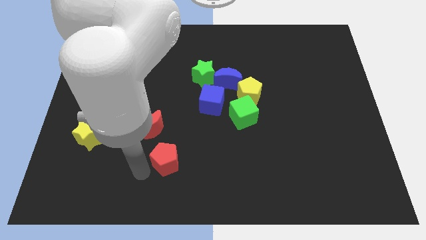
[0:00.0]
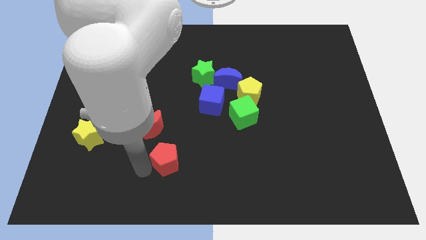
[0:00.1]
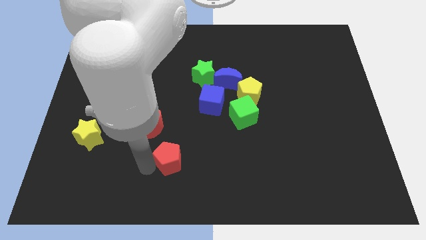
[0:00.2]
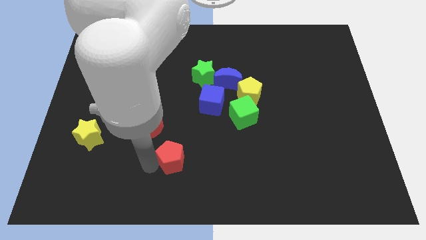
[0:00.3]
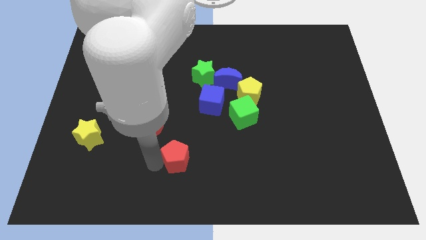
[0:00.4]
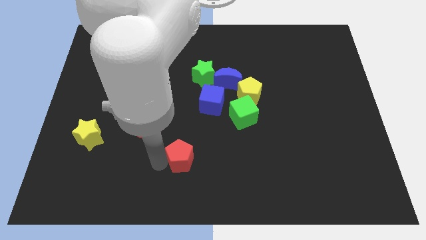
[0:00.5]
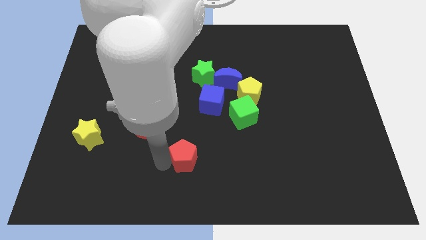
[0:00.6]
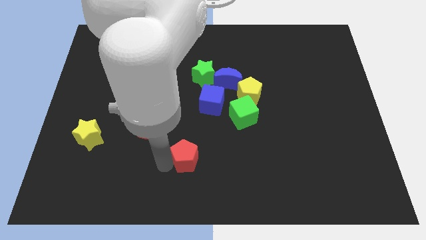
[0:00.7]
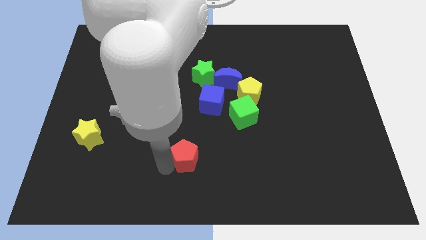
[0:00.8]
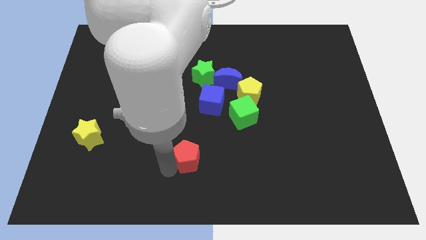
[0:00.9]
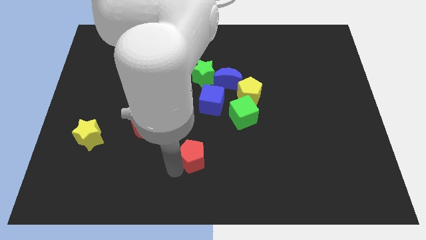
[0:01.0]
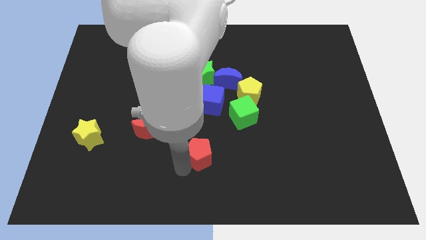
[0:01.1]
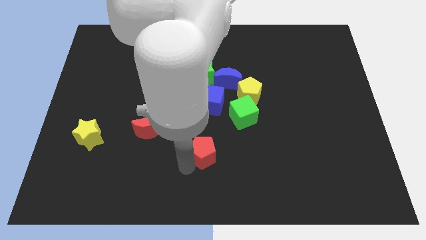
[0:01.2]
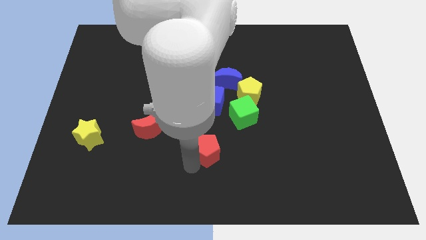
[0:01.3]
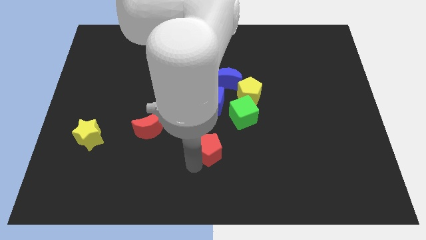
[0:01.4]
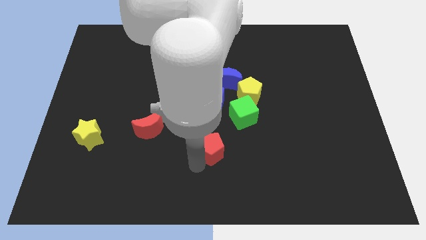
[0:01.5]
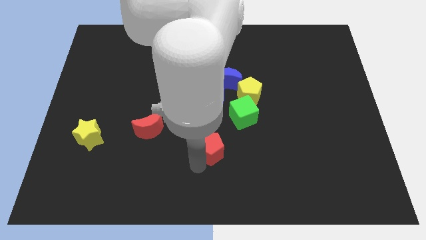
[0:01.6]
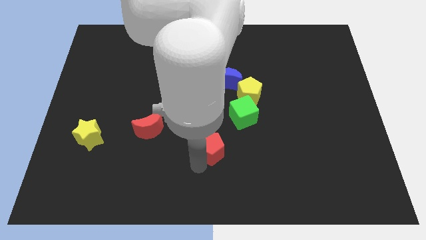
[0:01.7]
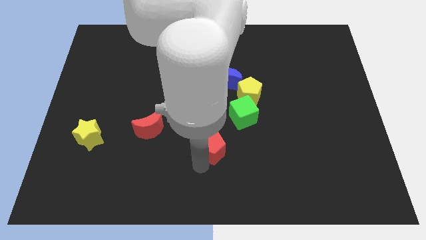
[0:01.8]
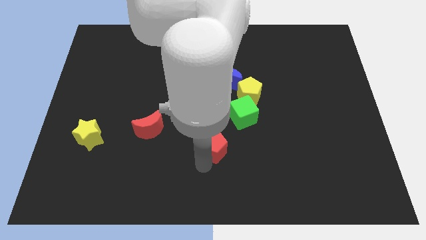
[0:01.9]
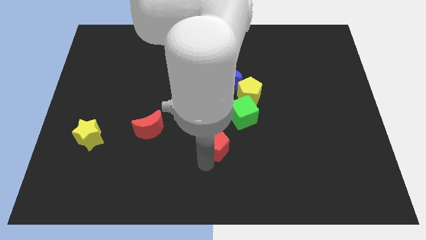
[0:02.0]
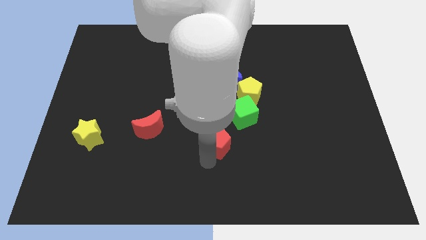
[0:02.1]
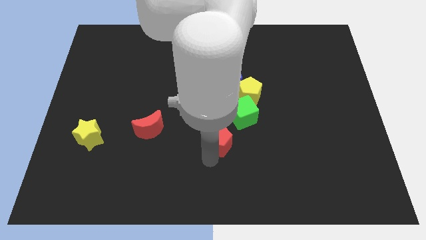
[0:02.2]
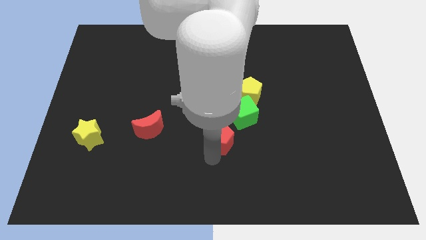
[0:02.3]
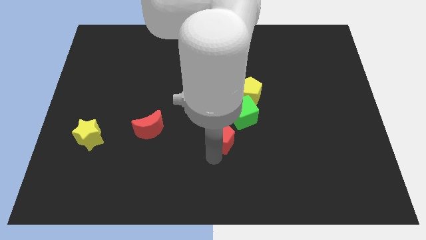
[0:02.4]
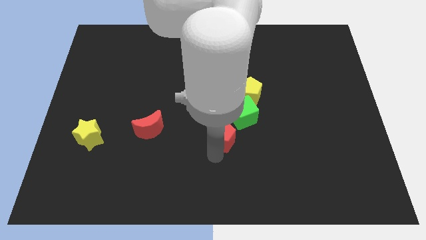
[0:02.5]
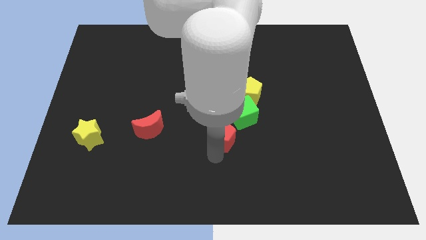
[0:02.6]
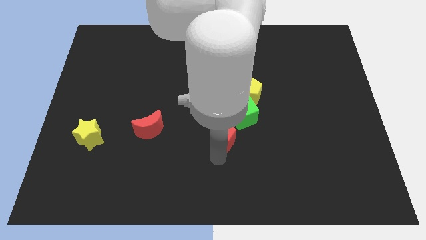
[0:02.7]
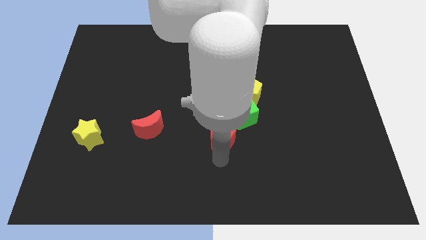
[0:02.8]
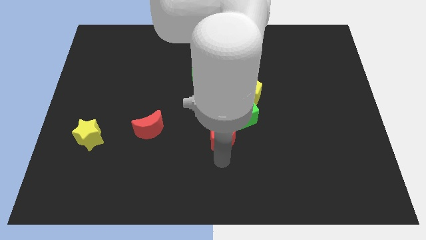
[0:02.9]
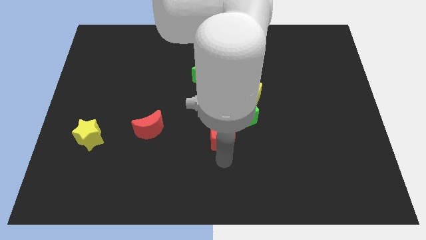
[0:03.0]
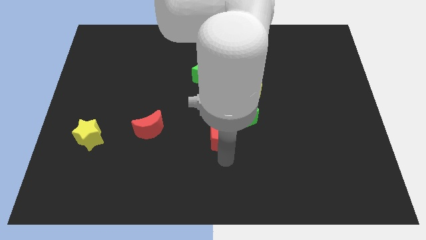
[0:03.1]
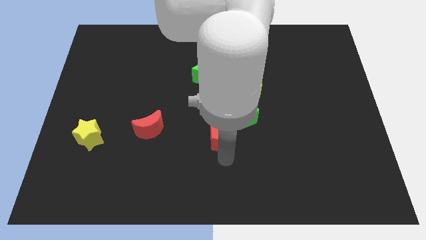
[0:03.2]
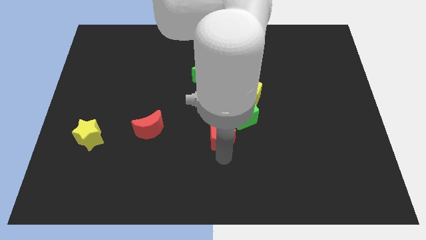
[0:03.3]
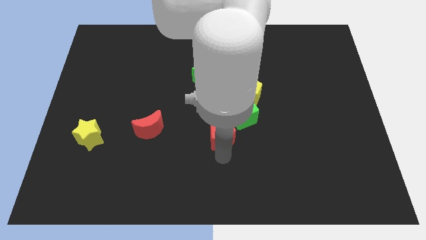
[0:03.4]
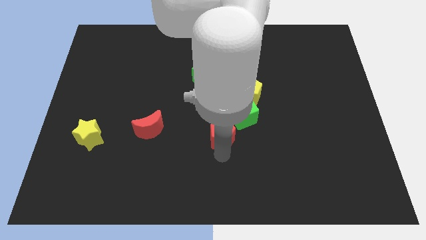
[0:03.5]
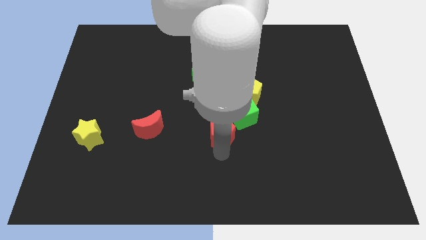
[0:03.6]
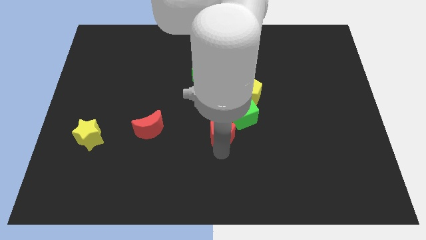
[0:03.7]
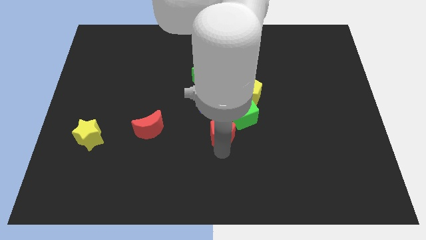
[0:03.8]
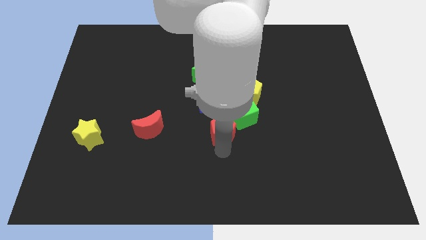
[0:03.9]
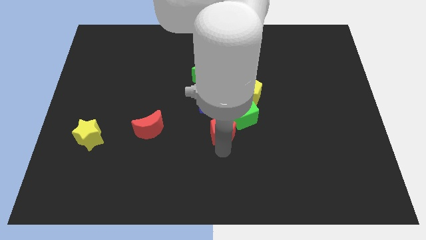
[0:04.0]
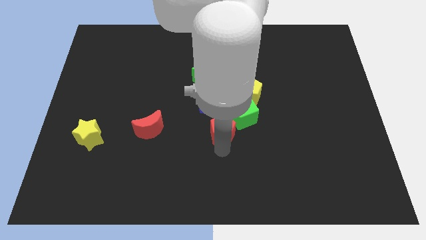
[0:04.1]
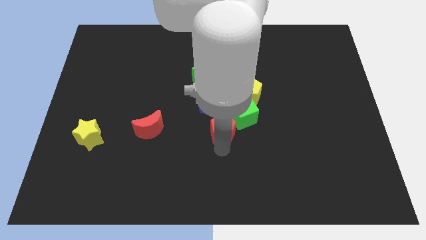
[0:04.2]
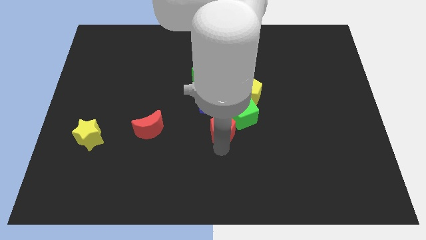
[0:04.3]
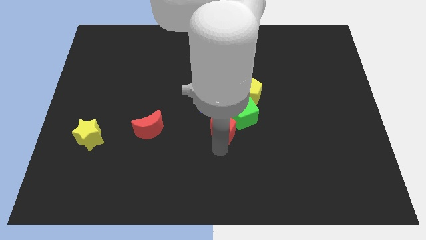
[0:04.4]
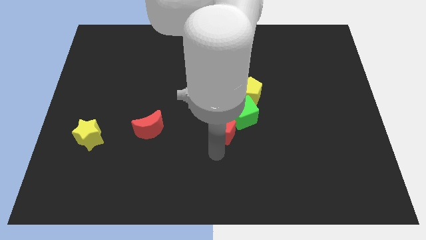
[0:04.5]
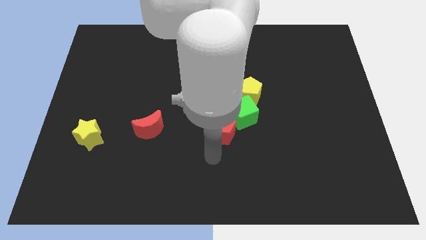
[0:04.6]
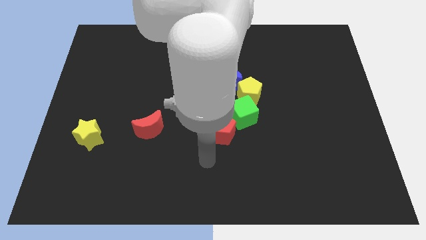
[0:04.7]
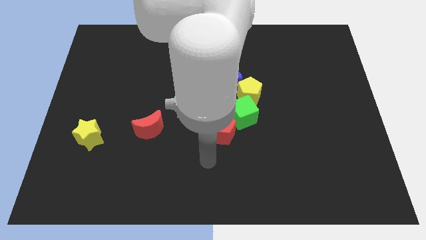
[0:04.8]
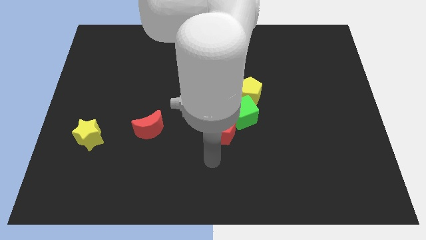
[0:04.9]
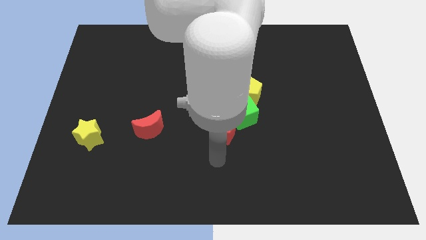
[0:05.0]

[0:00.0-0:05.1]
slide red pentagon into green cube

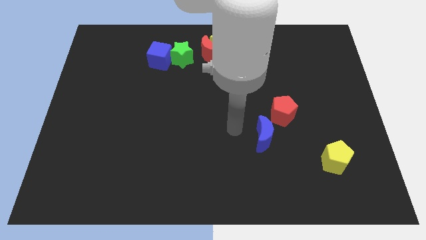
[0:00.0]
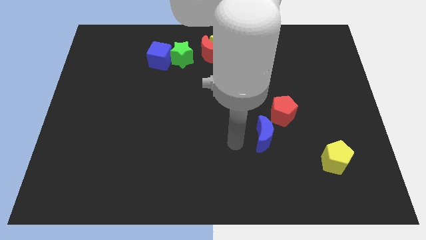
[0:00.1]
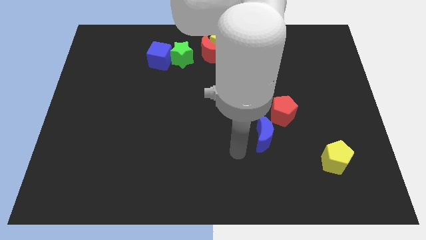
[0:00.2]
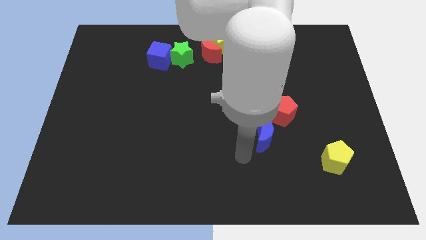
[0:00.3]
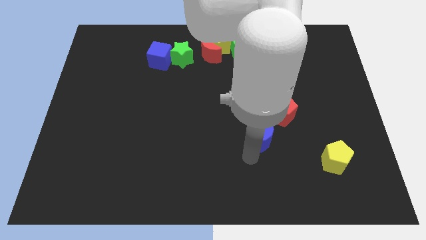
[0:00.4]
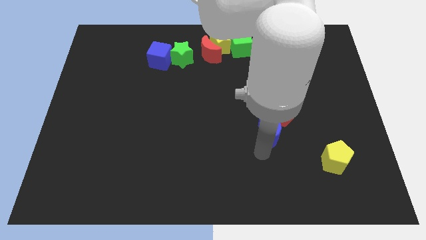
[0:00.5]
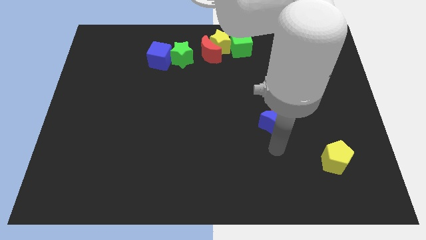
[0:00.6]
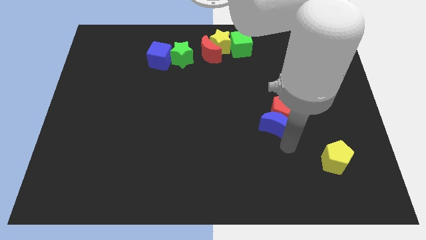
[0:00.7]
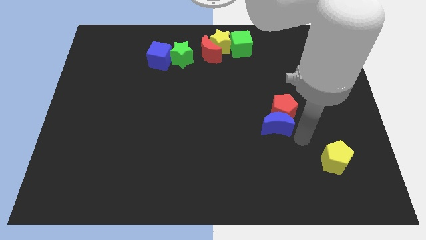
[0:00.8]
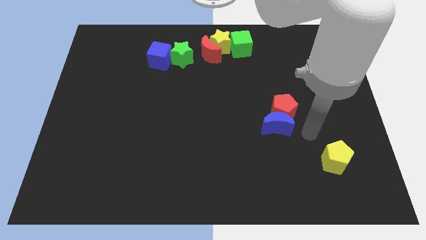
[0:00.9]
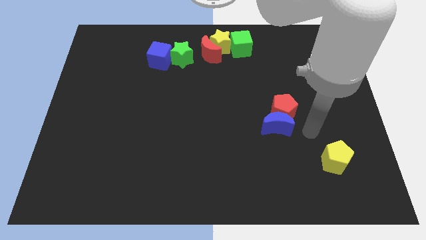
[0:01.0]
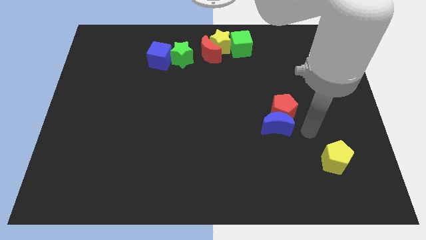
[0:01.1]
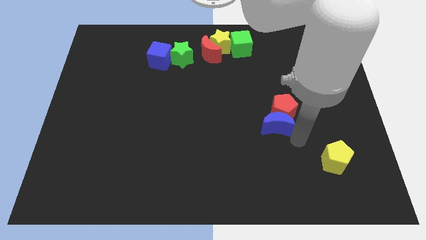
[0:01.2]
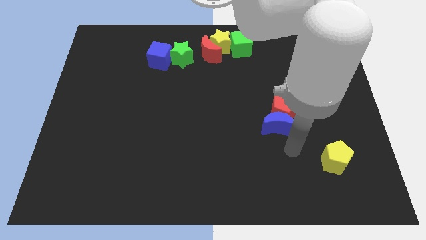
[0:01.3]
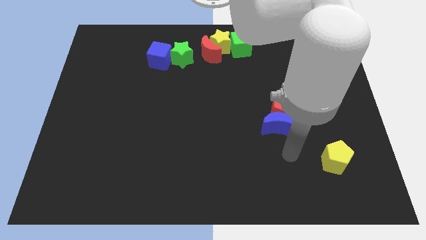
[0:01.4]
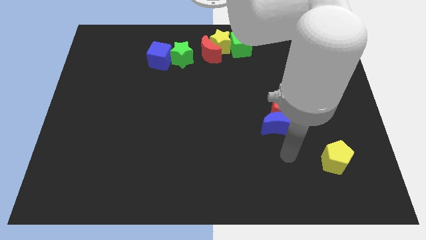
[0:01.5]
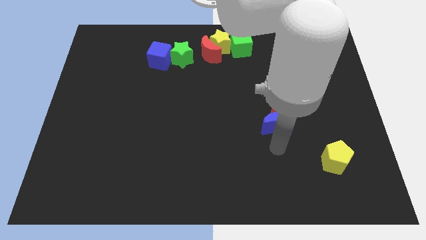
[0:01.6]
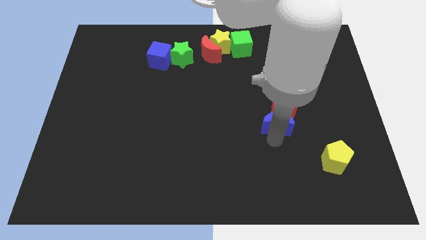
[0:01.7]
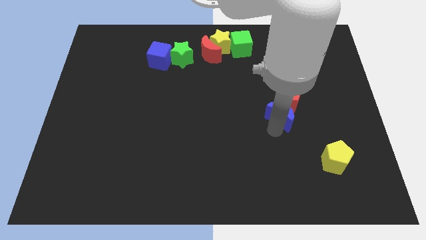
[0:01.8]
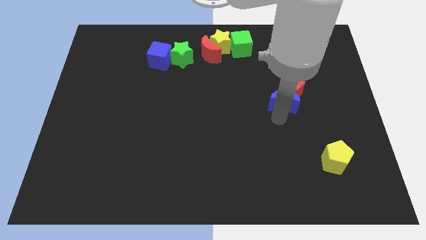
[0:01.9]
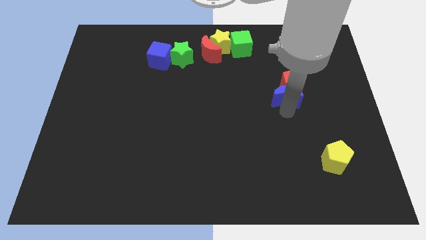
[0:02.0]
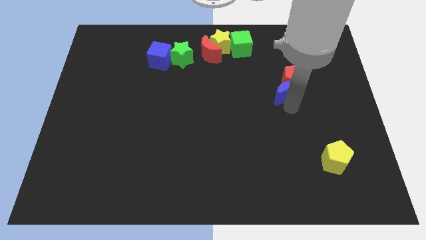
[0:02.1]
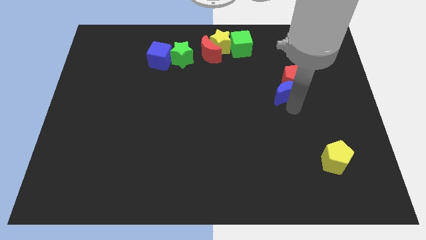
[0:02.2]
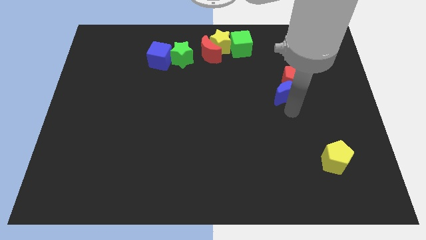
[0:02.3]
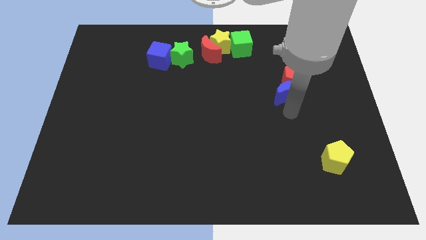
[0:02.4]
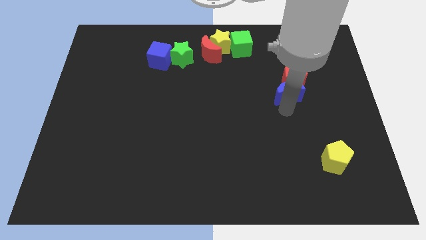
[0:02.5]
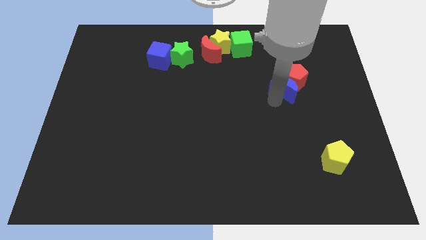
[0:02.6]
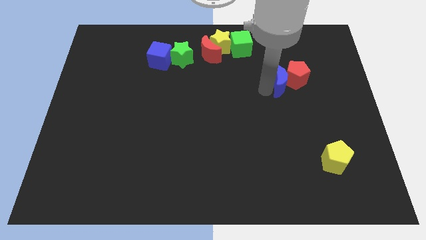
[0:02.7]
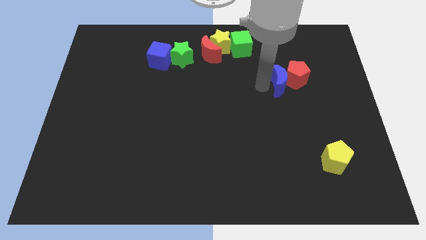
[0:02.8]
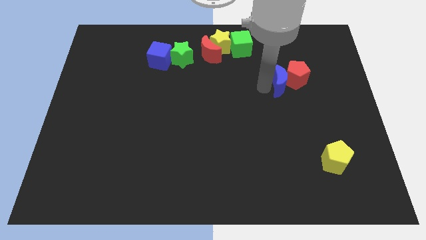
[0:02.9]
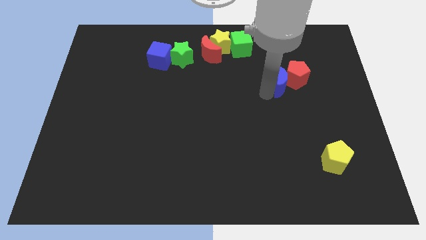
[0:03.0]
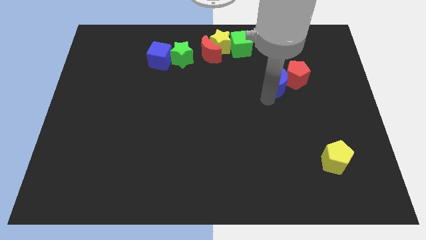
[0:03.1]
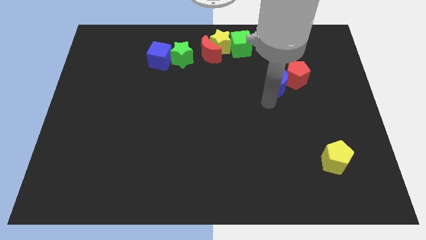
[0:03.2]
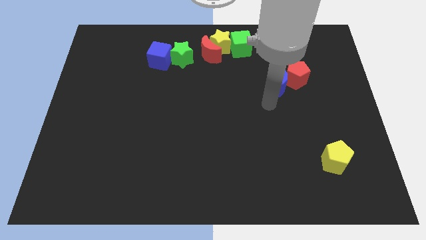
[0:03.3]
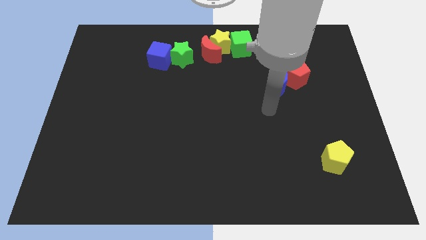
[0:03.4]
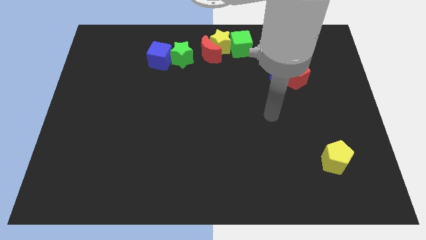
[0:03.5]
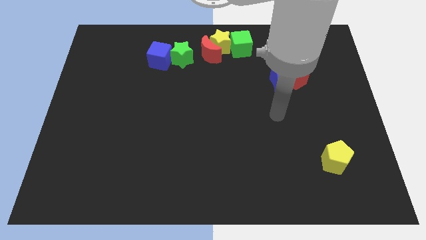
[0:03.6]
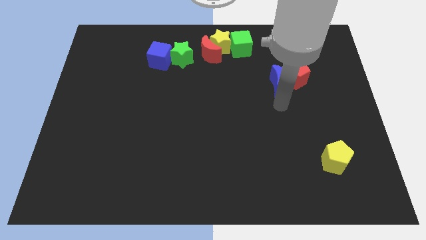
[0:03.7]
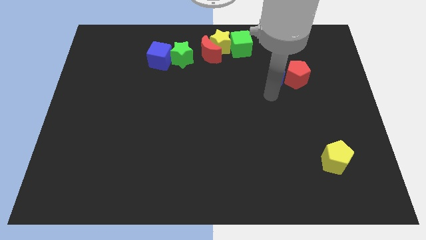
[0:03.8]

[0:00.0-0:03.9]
push the red pentagon with blue crescent
